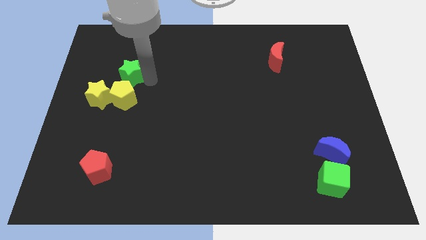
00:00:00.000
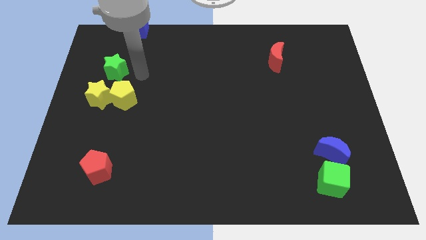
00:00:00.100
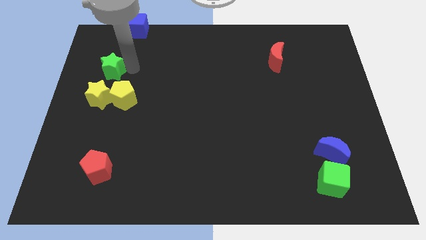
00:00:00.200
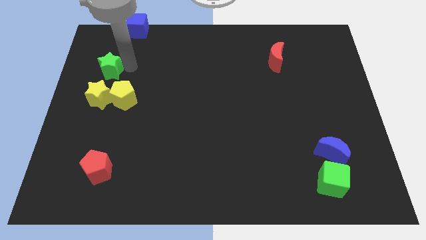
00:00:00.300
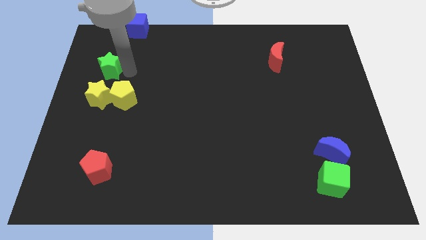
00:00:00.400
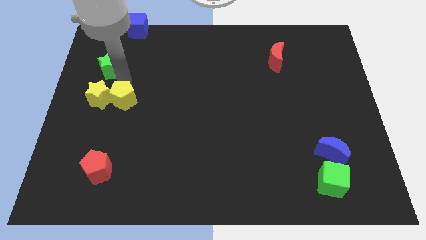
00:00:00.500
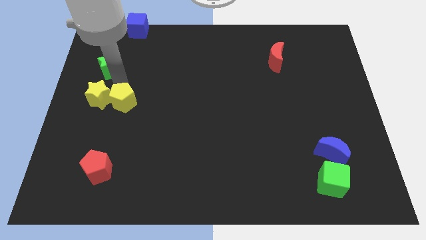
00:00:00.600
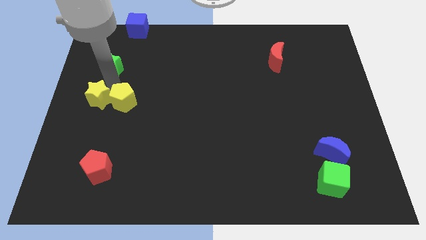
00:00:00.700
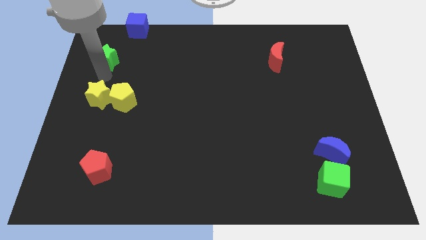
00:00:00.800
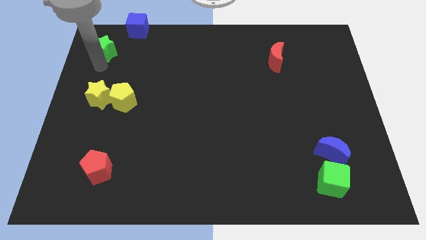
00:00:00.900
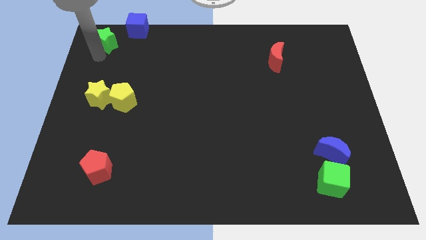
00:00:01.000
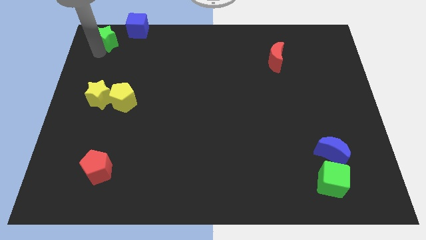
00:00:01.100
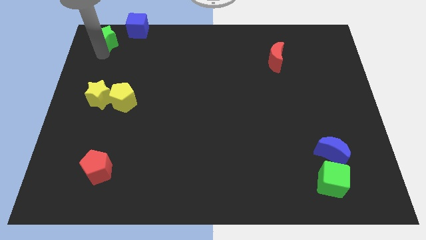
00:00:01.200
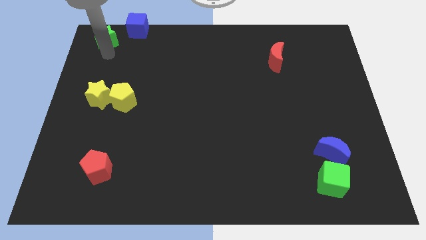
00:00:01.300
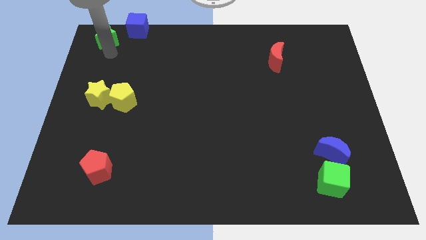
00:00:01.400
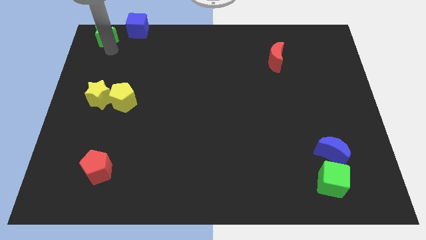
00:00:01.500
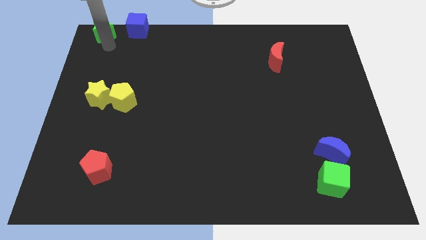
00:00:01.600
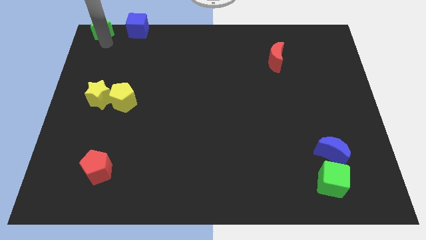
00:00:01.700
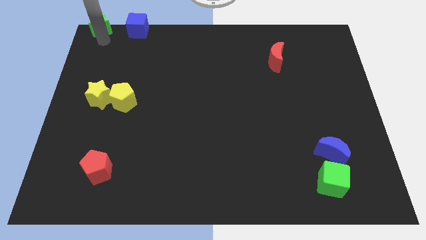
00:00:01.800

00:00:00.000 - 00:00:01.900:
place green star at the top left corner

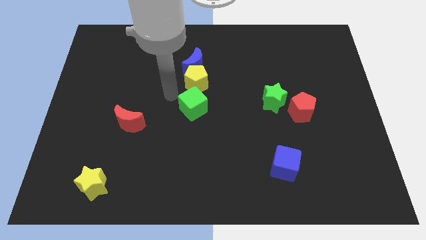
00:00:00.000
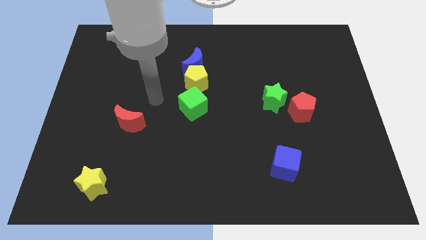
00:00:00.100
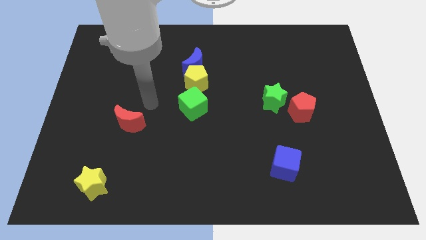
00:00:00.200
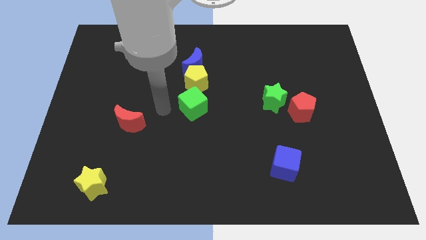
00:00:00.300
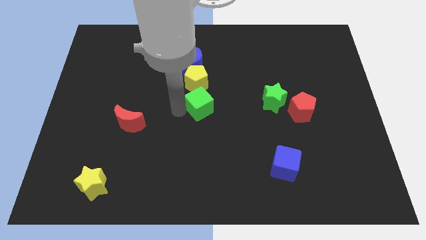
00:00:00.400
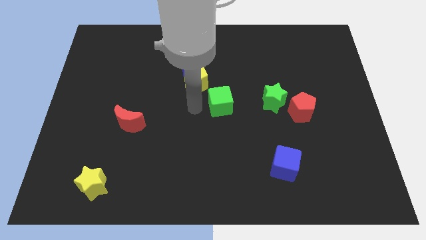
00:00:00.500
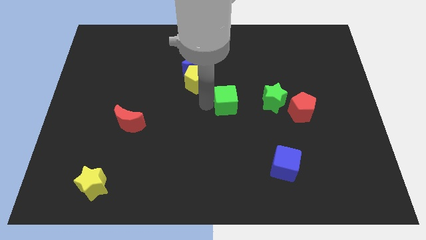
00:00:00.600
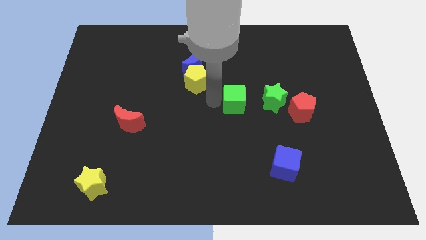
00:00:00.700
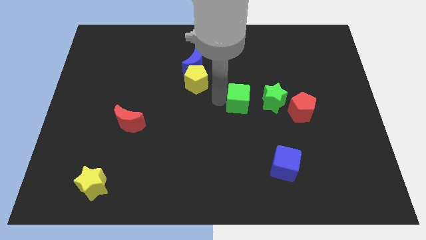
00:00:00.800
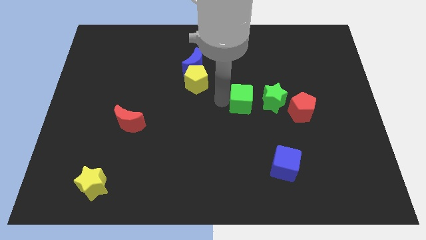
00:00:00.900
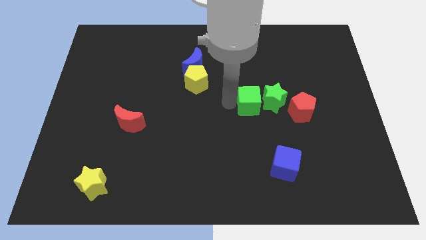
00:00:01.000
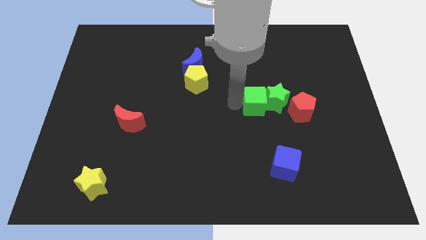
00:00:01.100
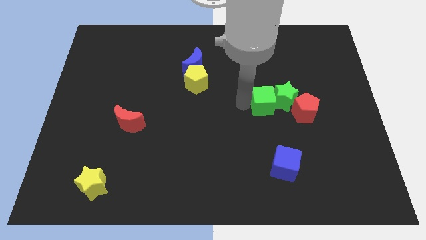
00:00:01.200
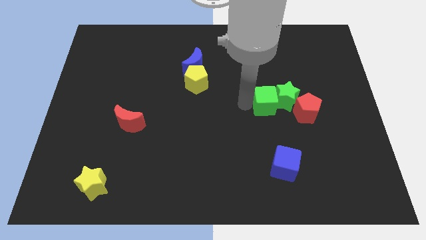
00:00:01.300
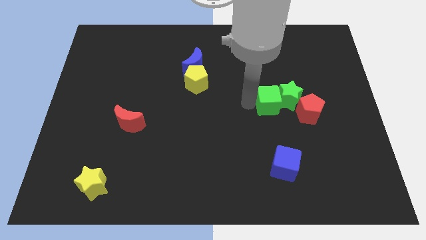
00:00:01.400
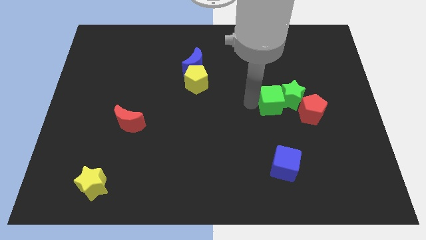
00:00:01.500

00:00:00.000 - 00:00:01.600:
push the green cube into the green star

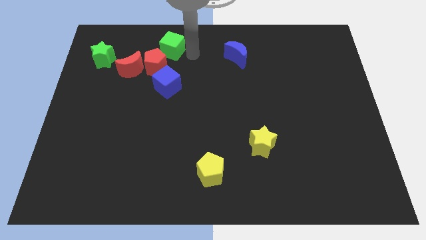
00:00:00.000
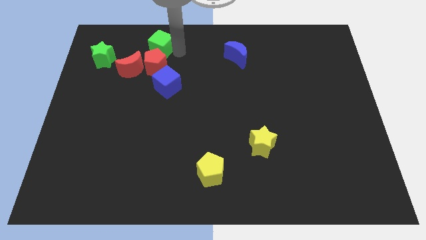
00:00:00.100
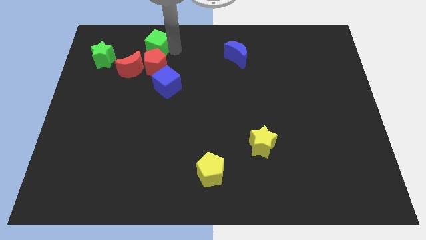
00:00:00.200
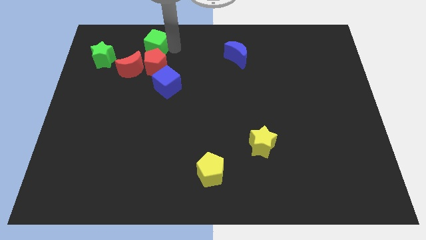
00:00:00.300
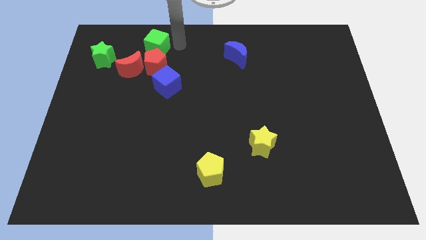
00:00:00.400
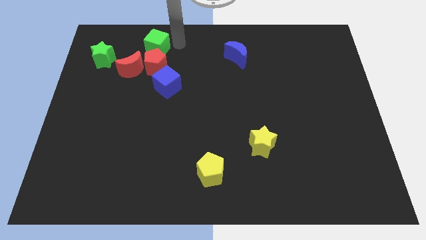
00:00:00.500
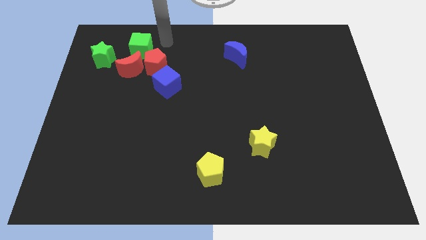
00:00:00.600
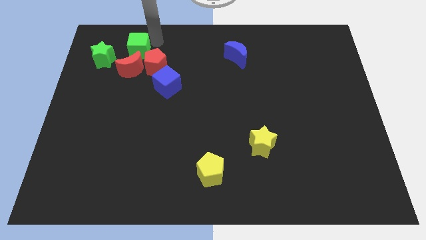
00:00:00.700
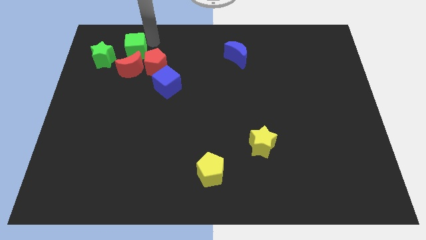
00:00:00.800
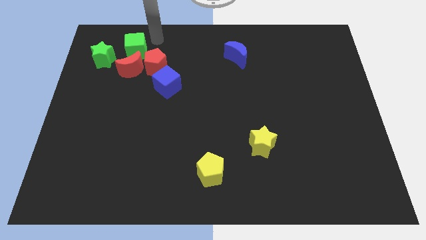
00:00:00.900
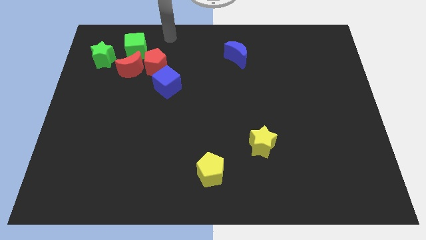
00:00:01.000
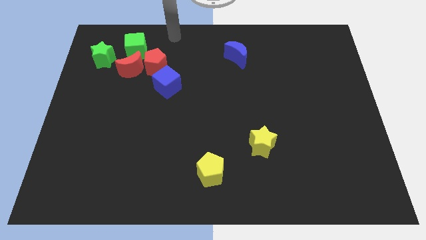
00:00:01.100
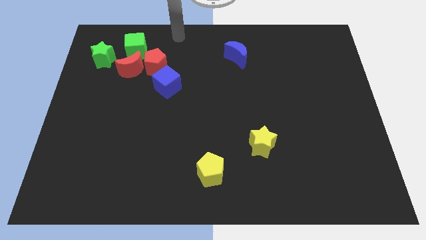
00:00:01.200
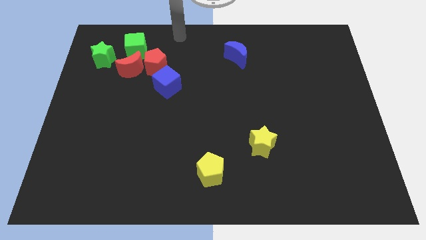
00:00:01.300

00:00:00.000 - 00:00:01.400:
move the green cube above the red moon

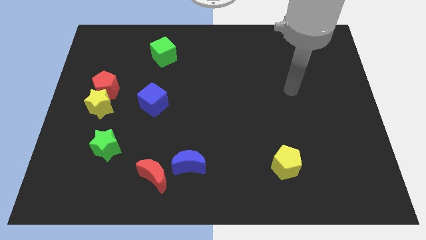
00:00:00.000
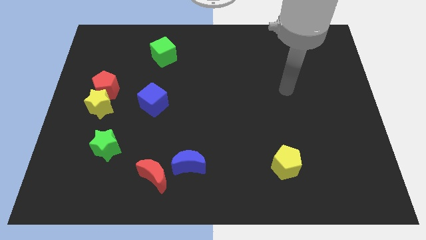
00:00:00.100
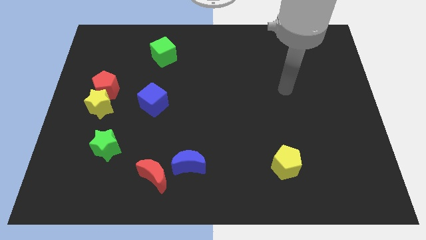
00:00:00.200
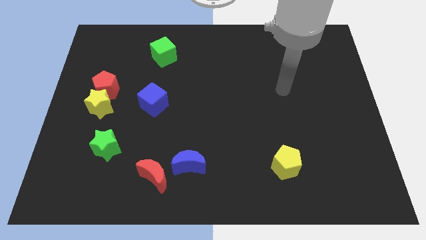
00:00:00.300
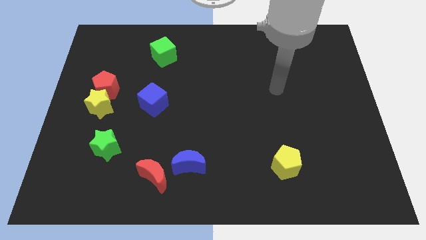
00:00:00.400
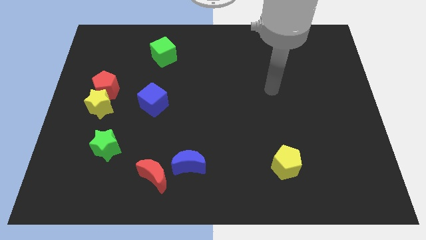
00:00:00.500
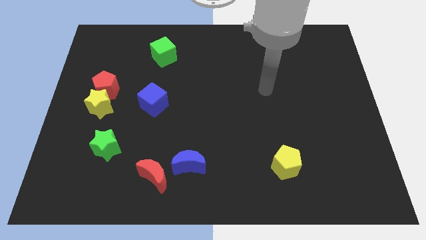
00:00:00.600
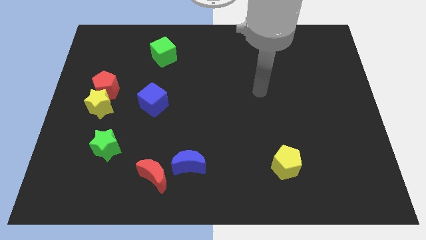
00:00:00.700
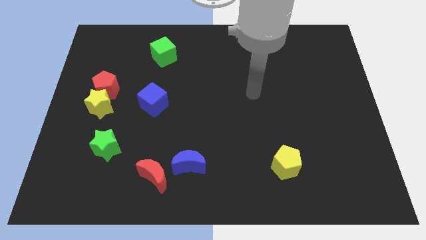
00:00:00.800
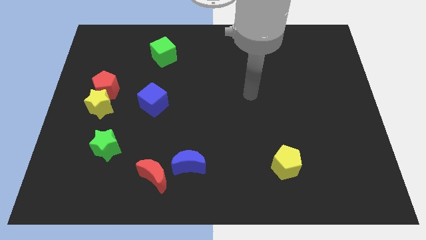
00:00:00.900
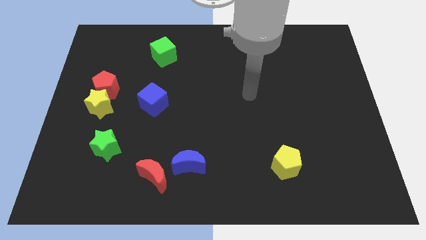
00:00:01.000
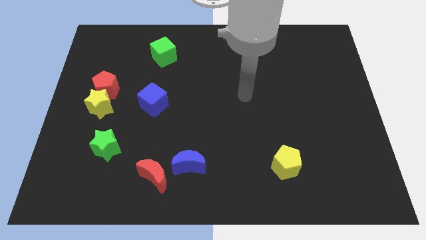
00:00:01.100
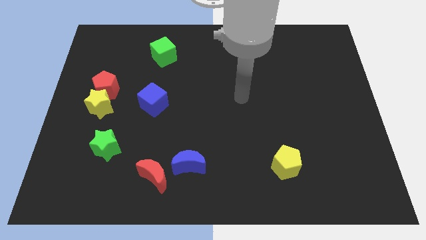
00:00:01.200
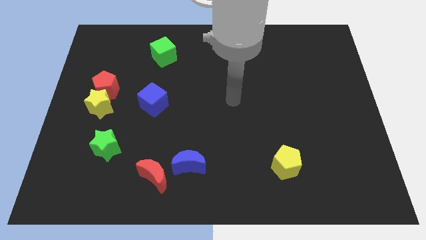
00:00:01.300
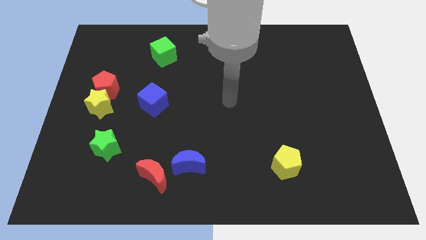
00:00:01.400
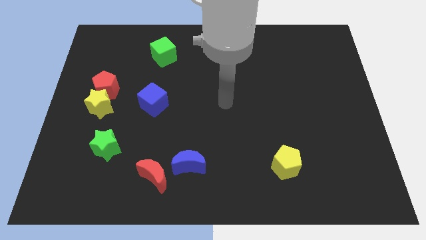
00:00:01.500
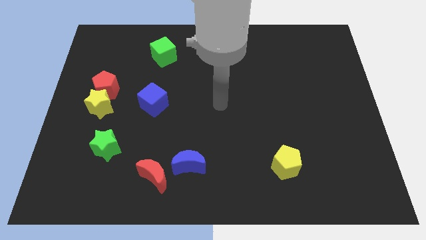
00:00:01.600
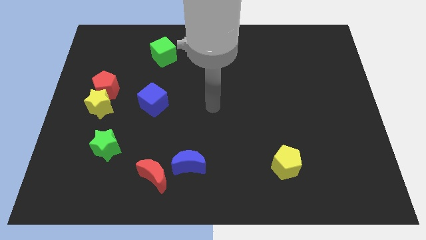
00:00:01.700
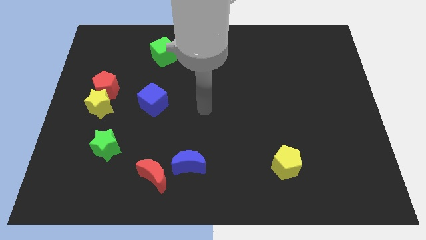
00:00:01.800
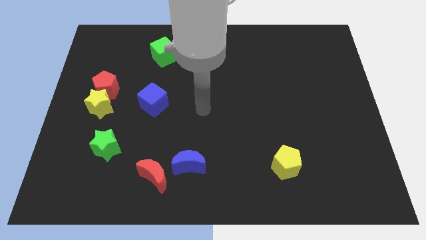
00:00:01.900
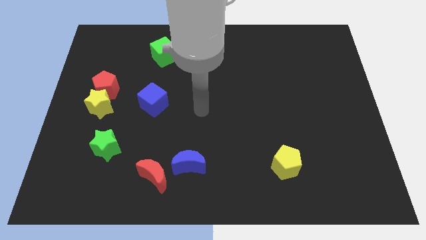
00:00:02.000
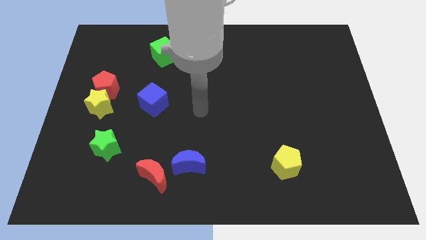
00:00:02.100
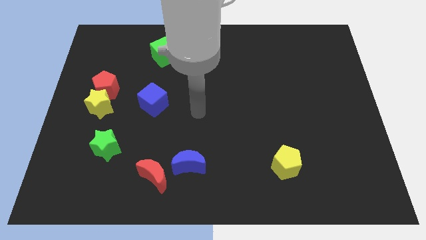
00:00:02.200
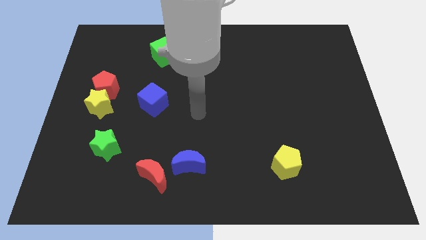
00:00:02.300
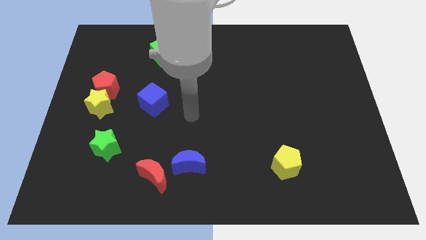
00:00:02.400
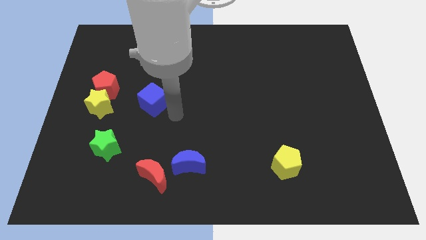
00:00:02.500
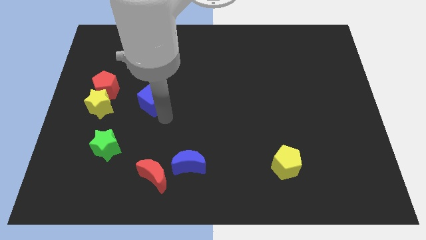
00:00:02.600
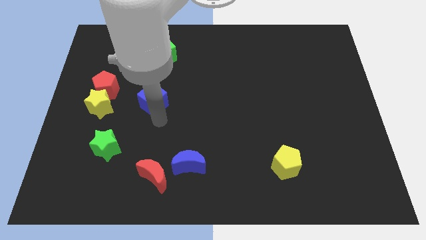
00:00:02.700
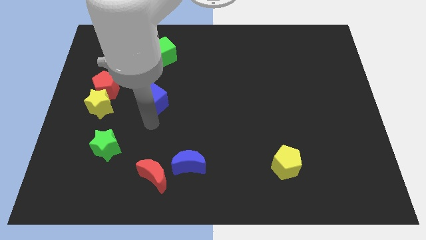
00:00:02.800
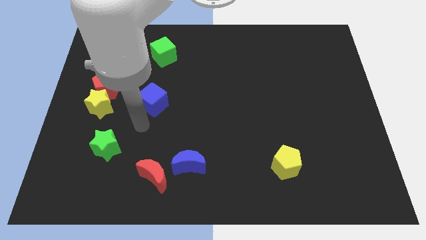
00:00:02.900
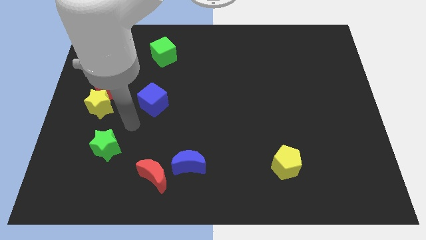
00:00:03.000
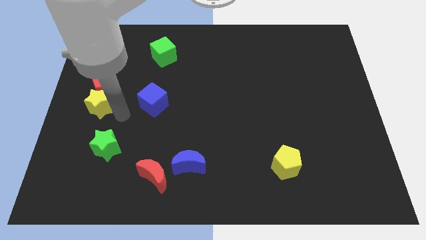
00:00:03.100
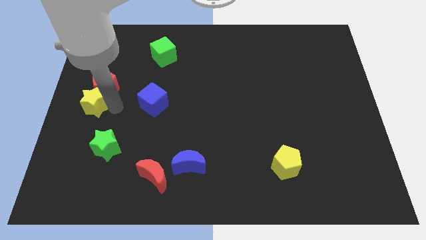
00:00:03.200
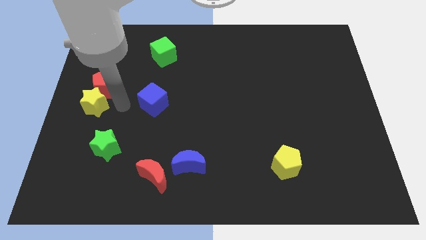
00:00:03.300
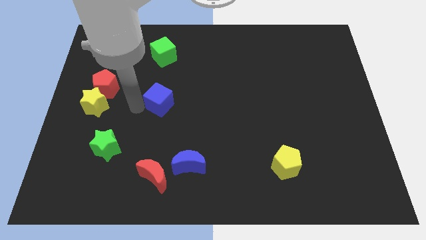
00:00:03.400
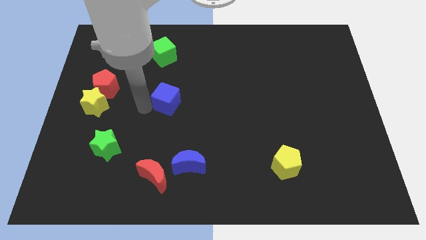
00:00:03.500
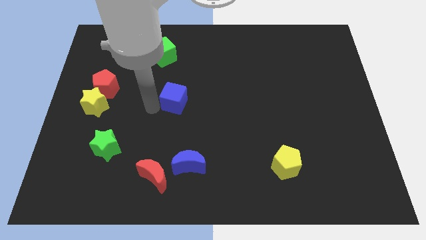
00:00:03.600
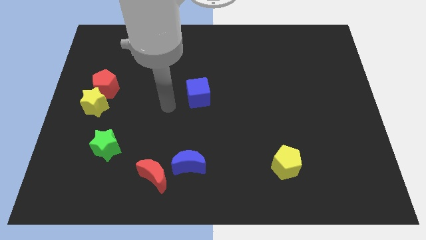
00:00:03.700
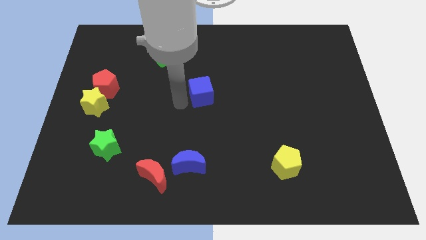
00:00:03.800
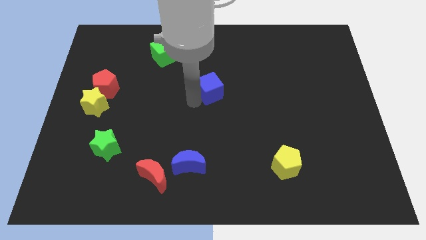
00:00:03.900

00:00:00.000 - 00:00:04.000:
move the blue cube to the center
